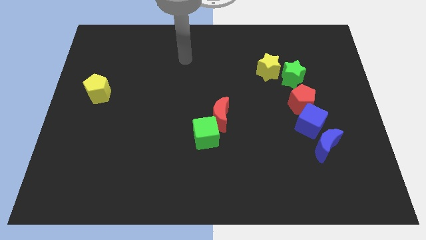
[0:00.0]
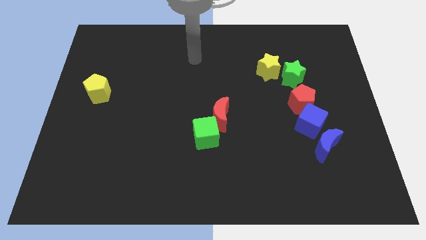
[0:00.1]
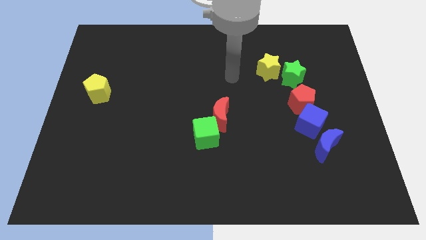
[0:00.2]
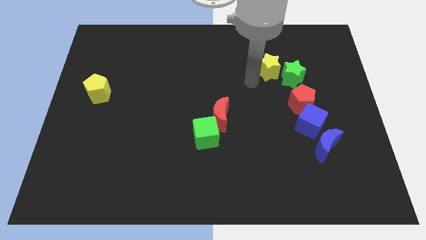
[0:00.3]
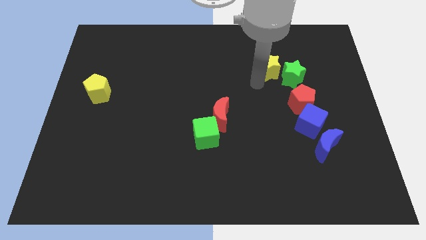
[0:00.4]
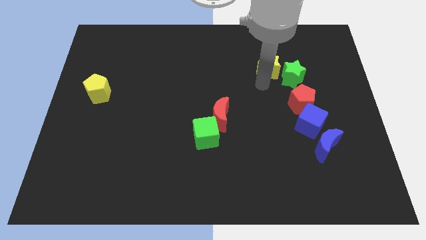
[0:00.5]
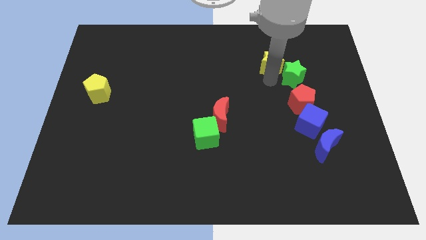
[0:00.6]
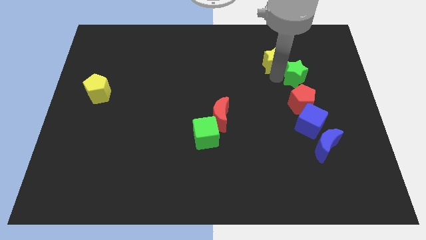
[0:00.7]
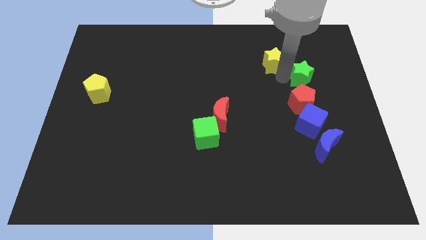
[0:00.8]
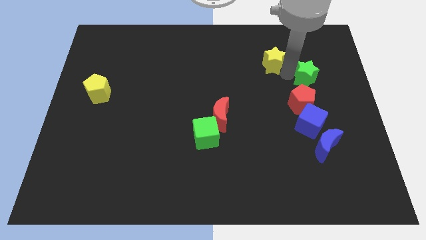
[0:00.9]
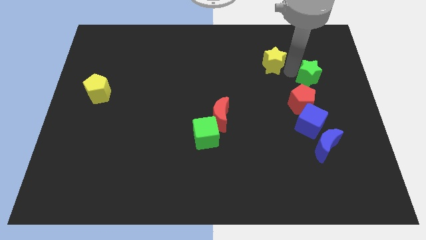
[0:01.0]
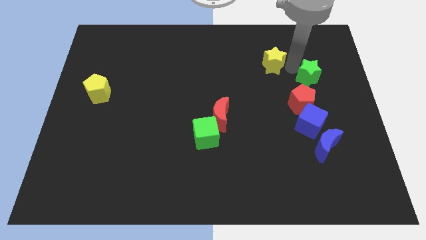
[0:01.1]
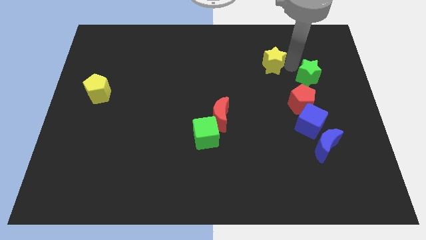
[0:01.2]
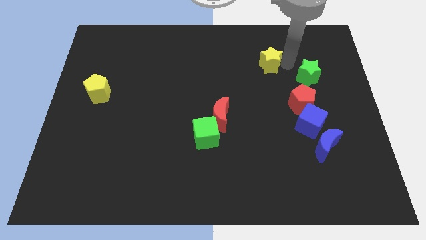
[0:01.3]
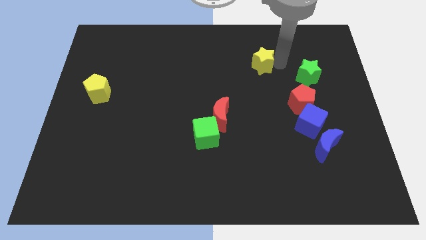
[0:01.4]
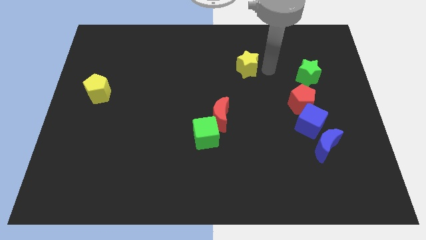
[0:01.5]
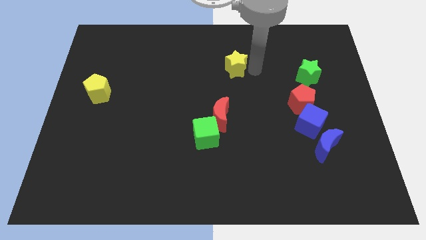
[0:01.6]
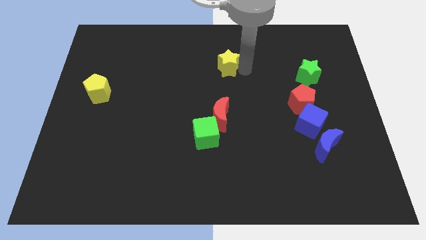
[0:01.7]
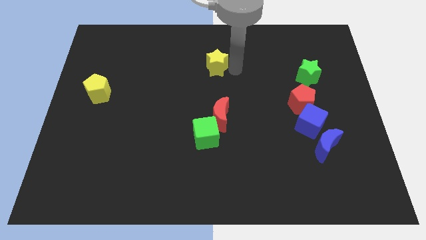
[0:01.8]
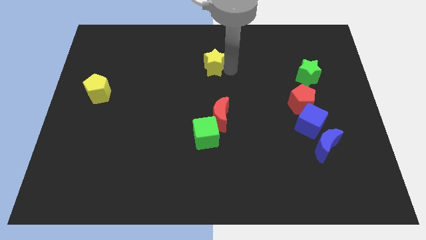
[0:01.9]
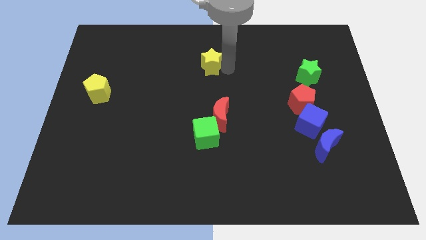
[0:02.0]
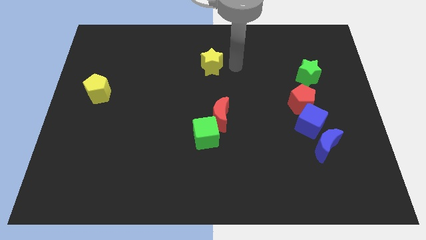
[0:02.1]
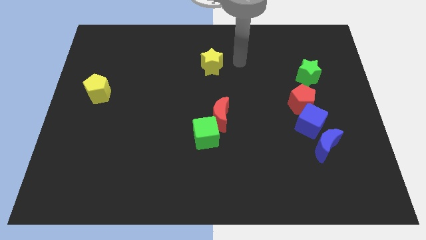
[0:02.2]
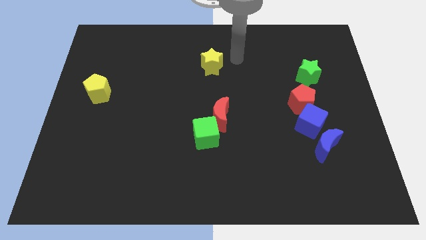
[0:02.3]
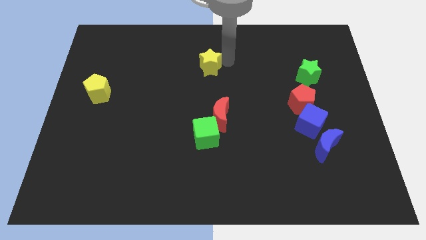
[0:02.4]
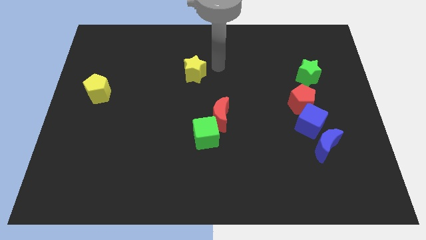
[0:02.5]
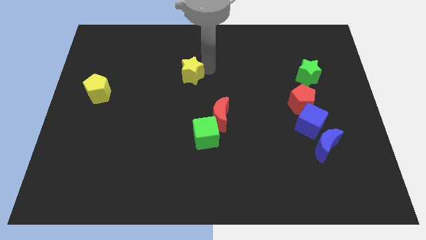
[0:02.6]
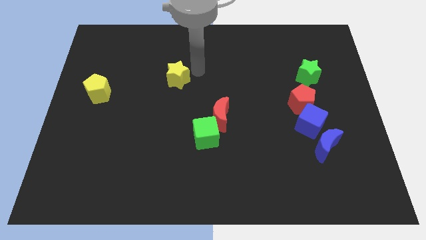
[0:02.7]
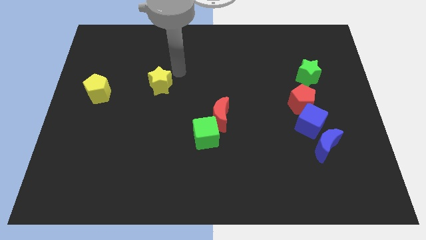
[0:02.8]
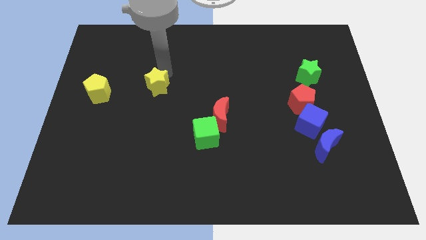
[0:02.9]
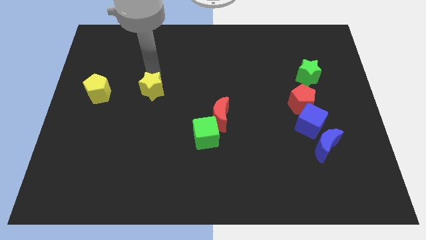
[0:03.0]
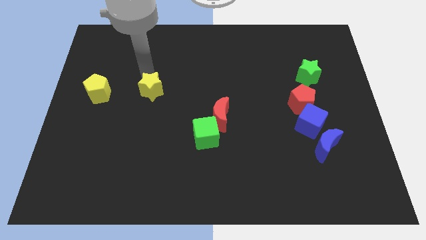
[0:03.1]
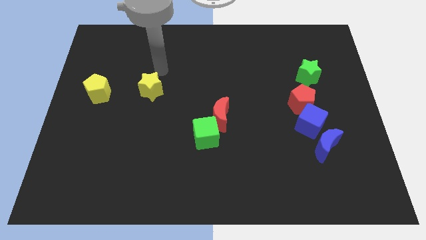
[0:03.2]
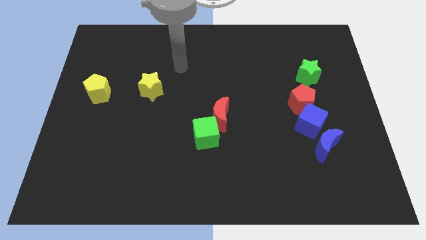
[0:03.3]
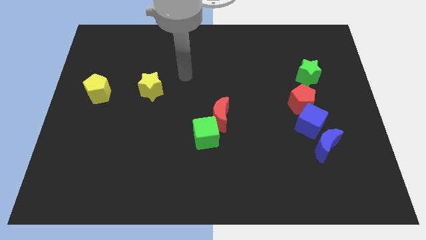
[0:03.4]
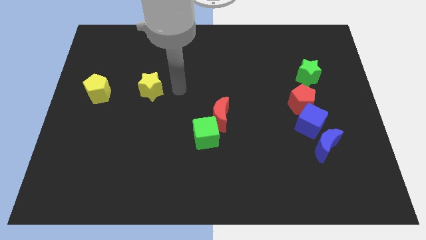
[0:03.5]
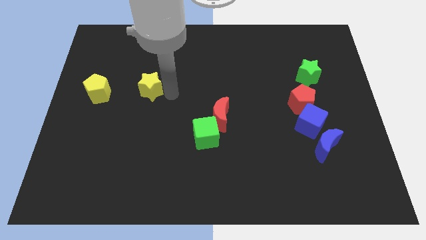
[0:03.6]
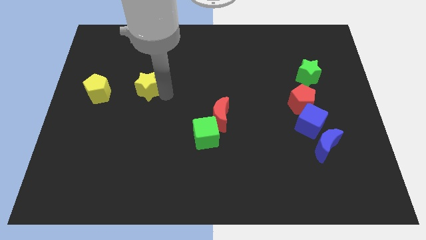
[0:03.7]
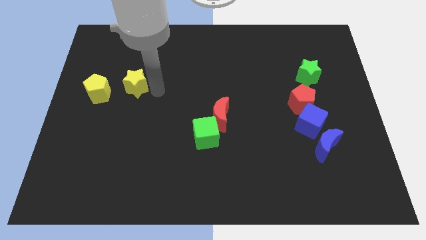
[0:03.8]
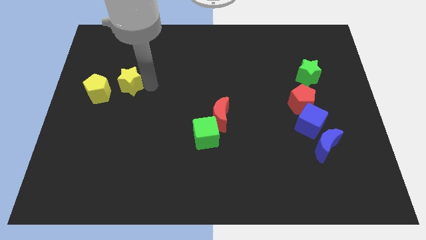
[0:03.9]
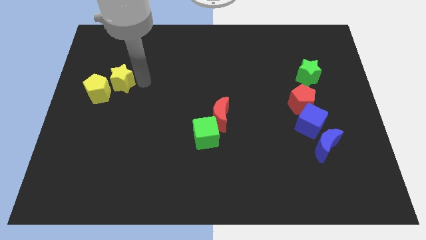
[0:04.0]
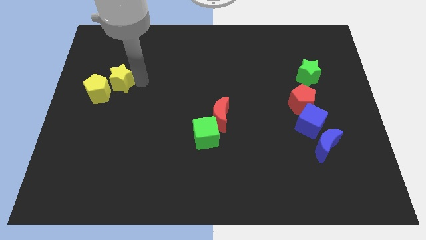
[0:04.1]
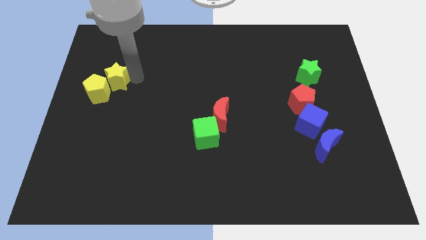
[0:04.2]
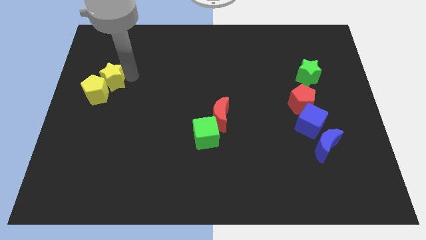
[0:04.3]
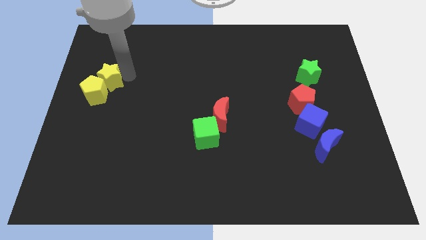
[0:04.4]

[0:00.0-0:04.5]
put the yellow star towards the yellow pentagon

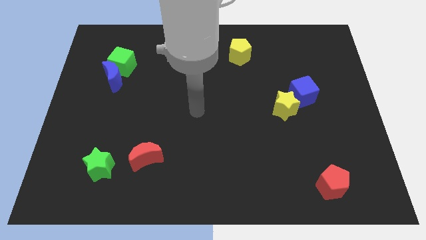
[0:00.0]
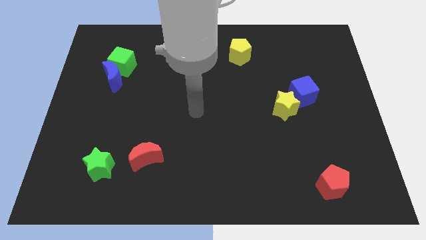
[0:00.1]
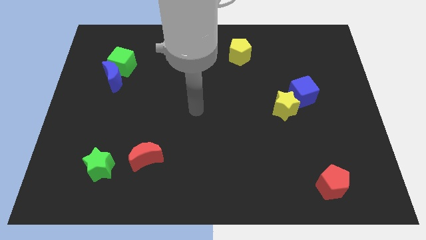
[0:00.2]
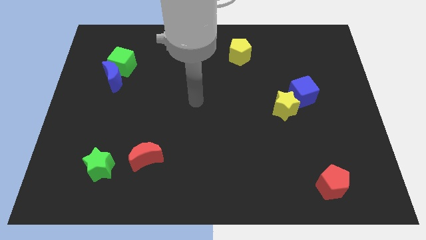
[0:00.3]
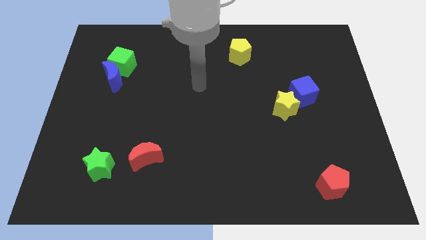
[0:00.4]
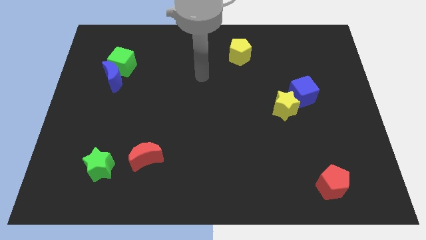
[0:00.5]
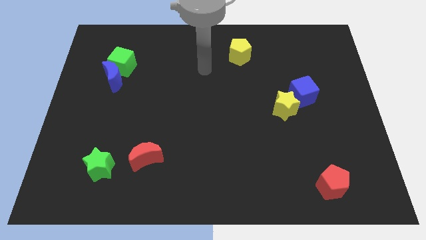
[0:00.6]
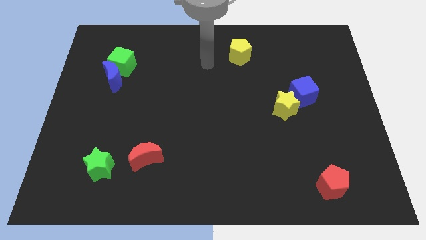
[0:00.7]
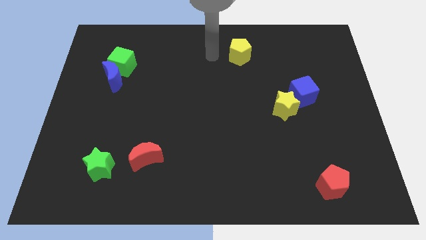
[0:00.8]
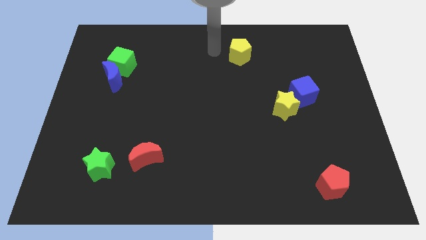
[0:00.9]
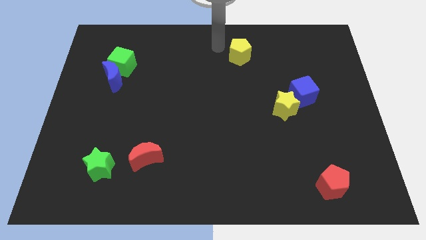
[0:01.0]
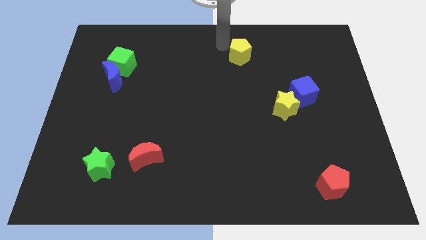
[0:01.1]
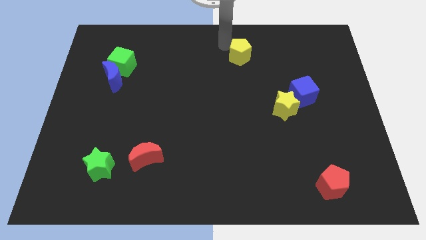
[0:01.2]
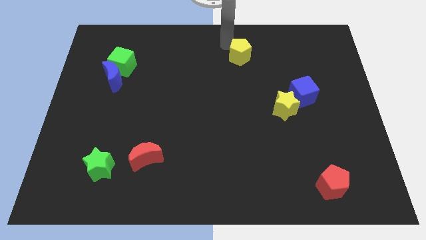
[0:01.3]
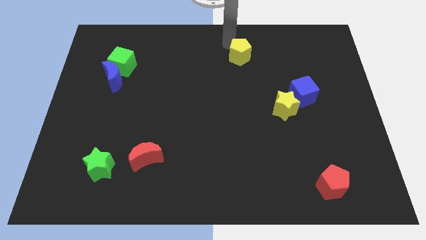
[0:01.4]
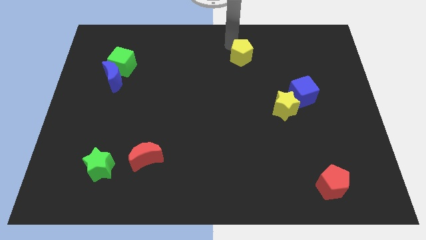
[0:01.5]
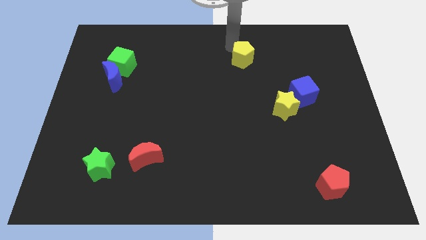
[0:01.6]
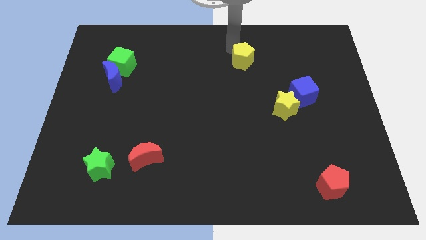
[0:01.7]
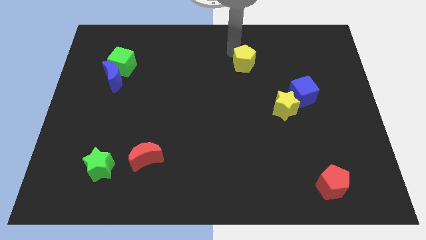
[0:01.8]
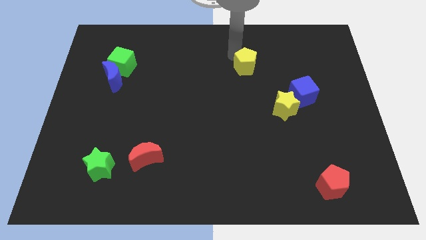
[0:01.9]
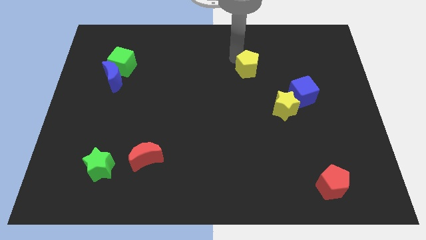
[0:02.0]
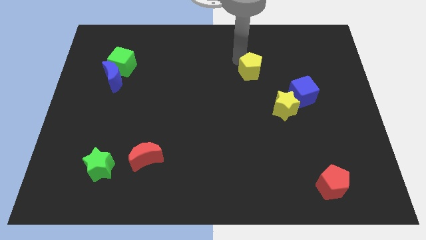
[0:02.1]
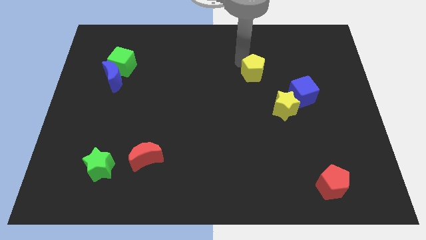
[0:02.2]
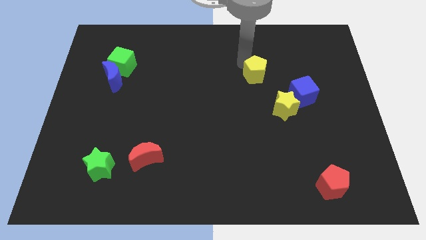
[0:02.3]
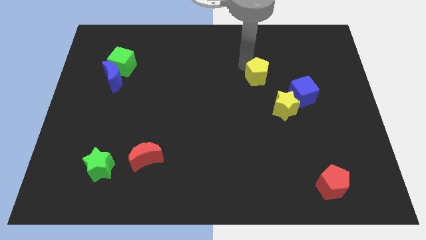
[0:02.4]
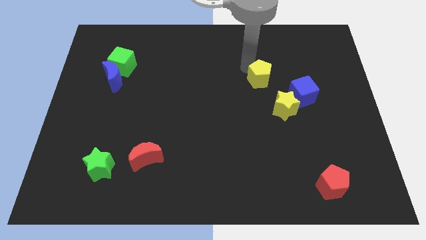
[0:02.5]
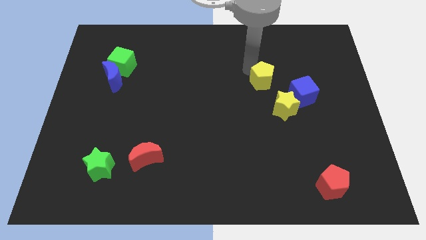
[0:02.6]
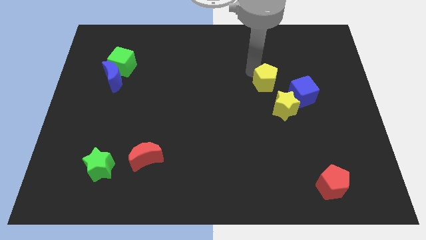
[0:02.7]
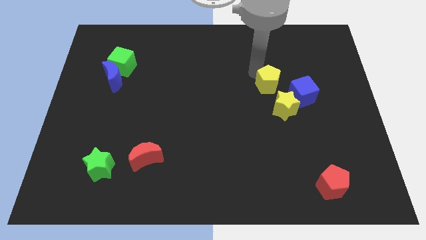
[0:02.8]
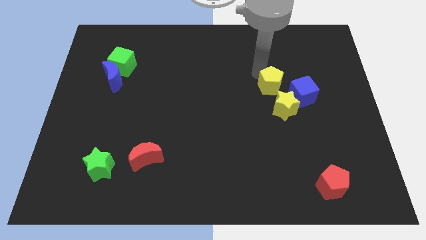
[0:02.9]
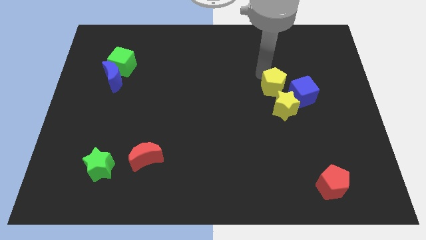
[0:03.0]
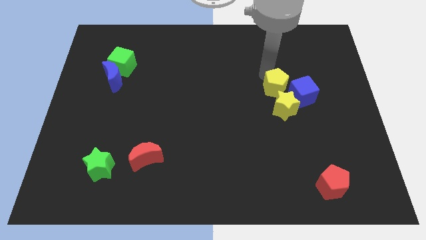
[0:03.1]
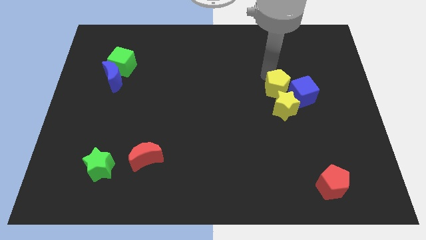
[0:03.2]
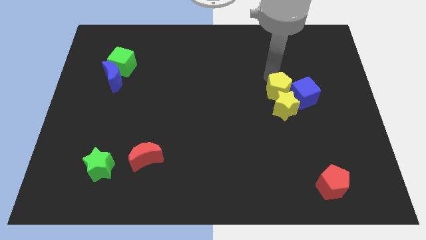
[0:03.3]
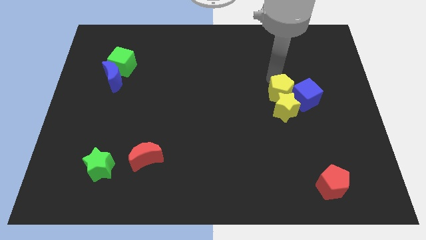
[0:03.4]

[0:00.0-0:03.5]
slide the yellow pentagon to the yellow star

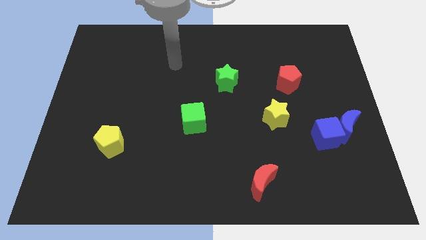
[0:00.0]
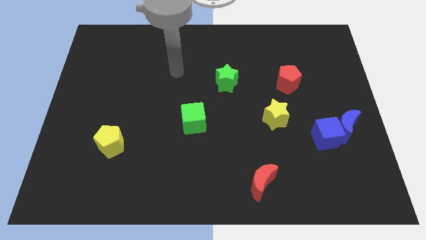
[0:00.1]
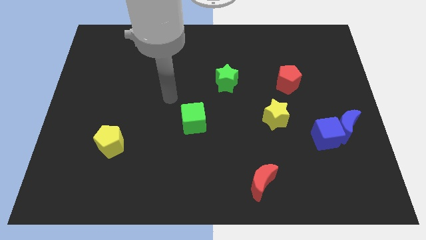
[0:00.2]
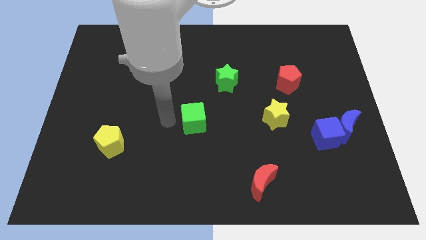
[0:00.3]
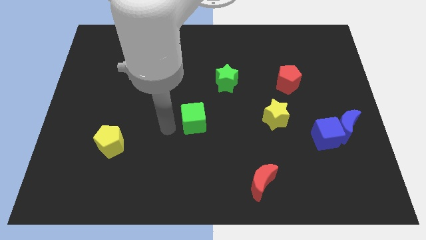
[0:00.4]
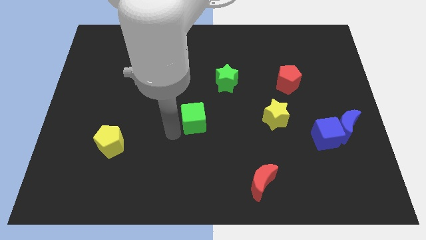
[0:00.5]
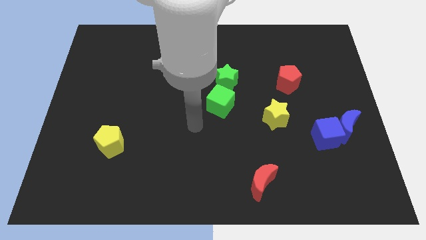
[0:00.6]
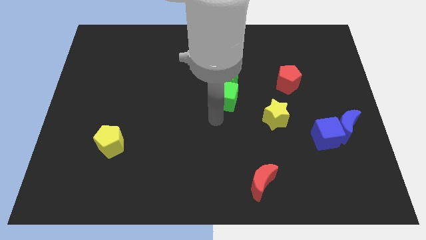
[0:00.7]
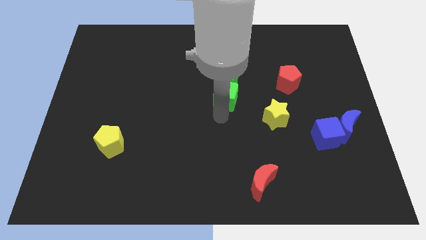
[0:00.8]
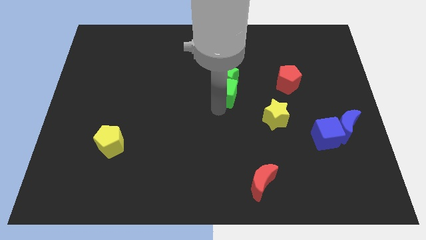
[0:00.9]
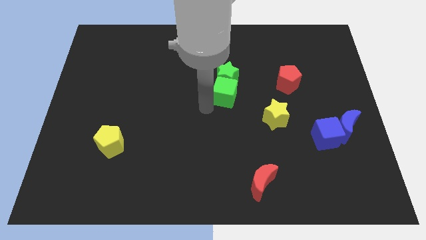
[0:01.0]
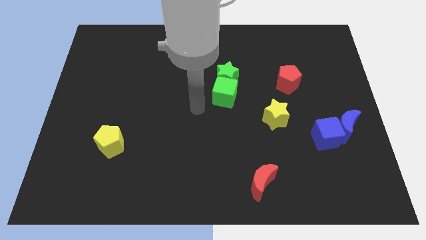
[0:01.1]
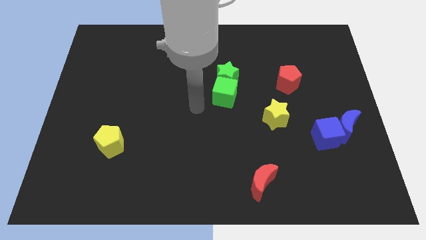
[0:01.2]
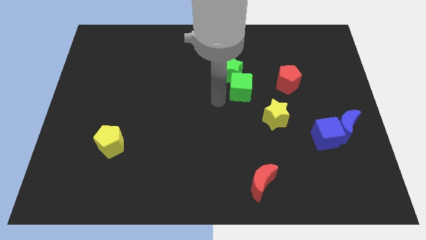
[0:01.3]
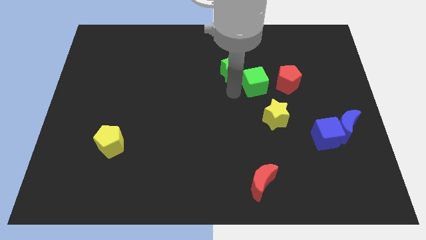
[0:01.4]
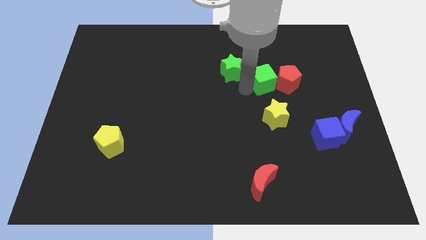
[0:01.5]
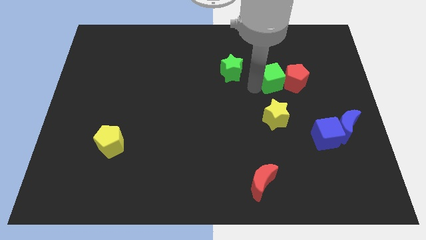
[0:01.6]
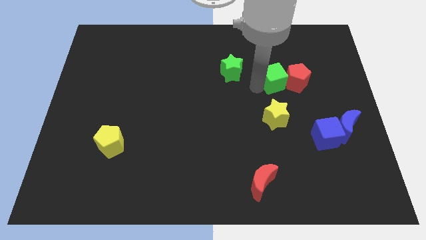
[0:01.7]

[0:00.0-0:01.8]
push the green cube next to the red pentagon
